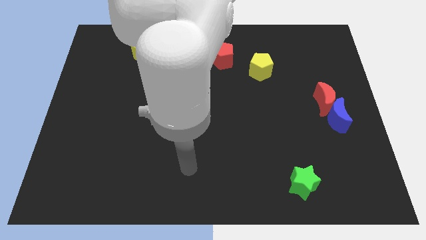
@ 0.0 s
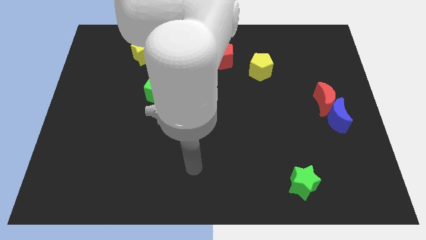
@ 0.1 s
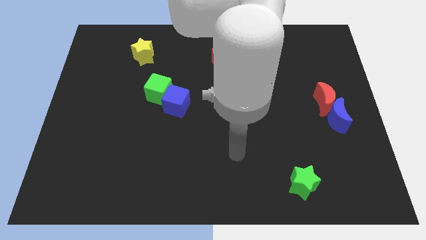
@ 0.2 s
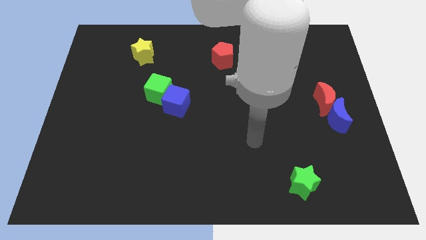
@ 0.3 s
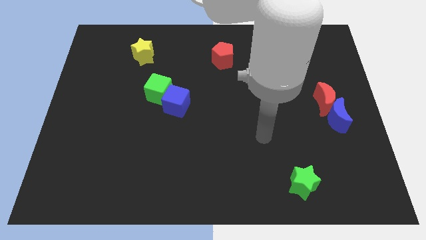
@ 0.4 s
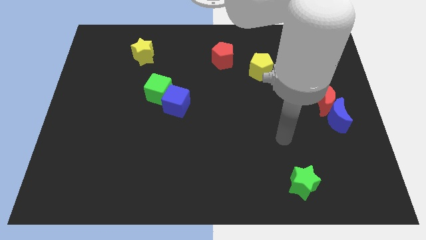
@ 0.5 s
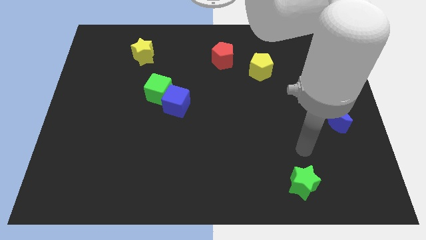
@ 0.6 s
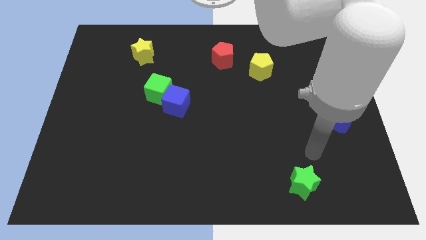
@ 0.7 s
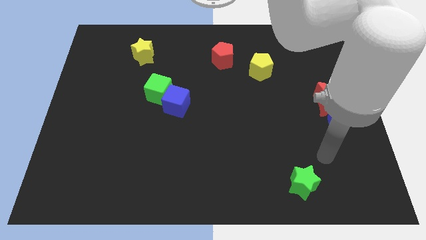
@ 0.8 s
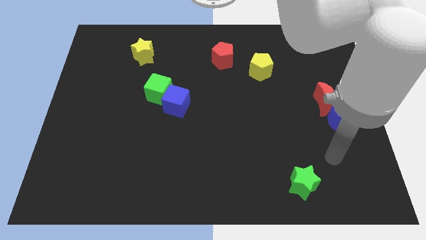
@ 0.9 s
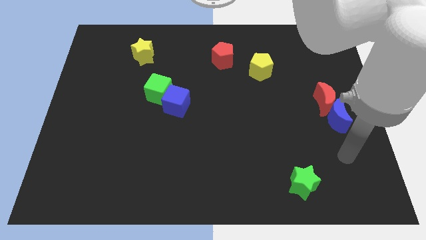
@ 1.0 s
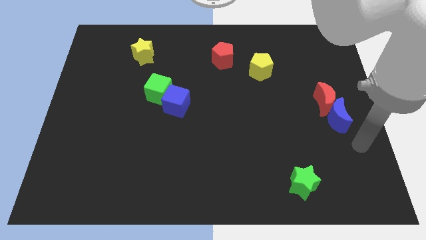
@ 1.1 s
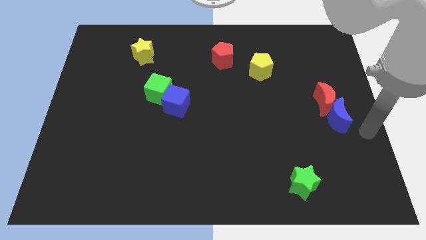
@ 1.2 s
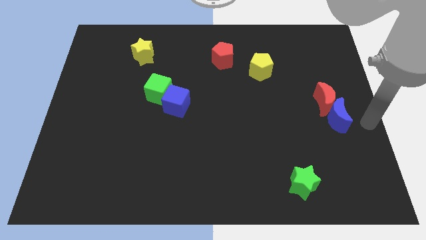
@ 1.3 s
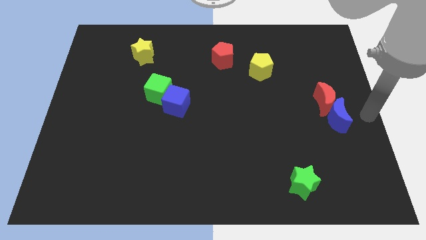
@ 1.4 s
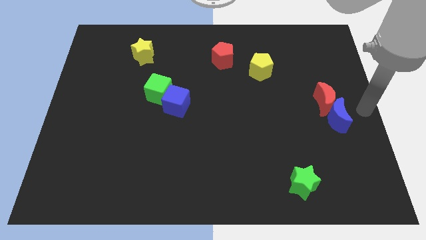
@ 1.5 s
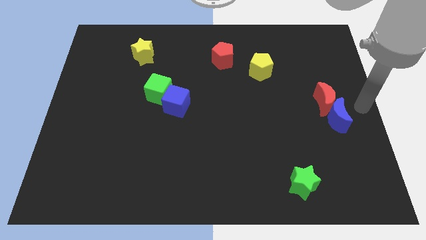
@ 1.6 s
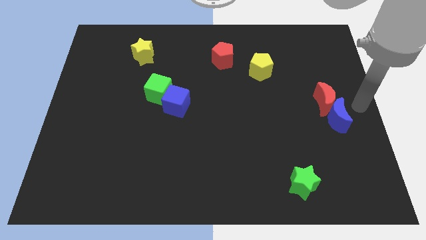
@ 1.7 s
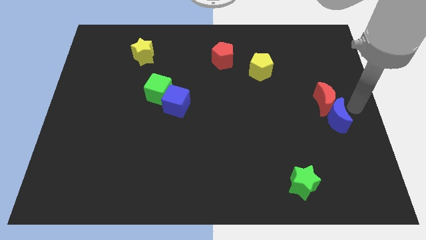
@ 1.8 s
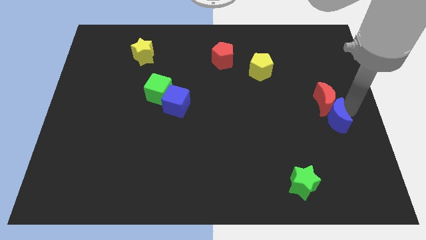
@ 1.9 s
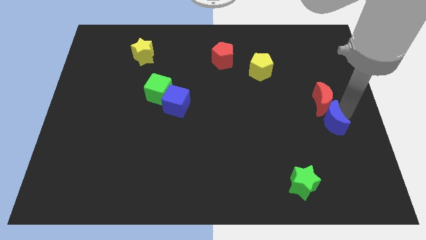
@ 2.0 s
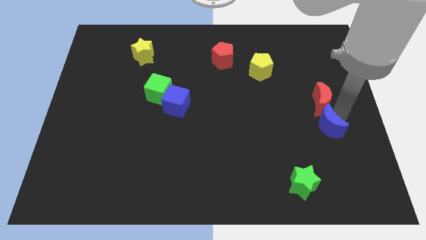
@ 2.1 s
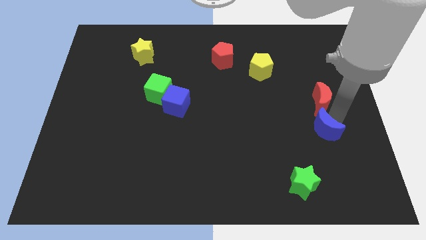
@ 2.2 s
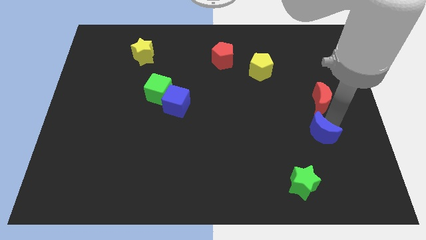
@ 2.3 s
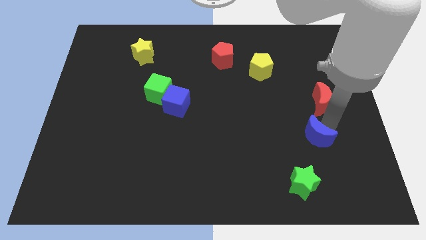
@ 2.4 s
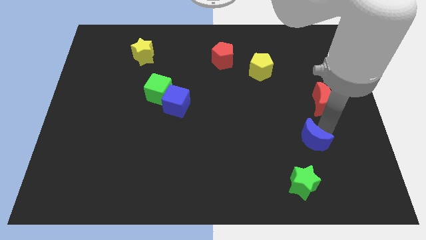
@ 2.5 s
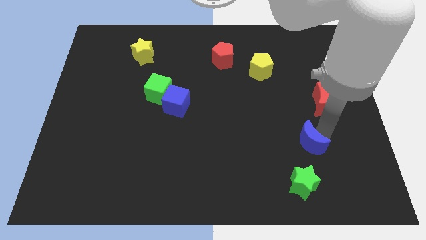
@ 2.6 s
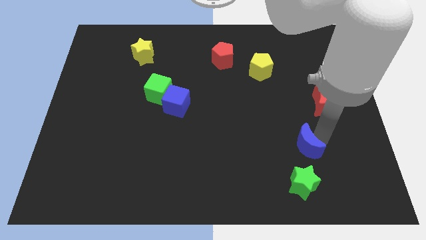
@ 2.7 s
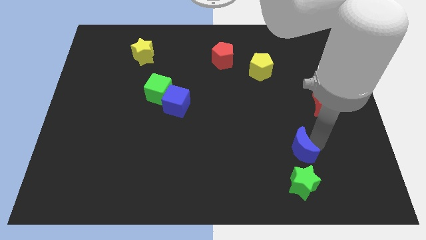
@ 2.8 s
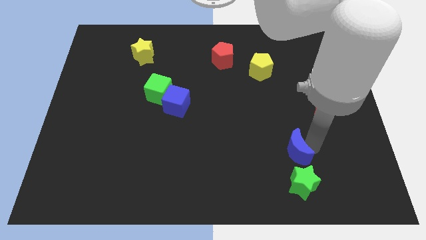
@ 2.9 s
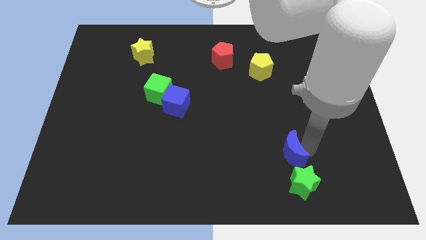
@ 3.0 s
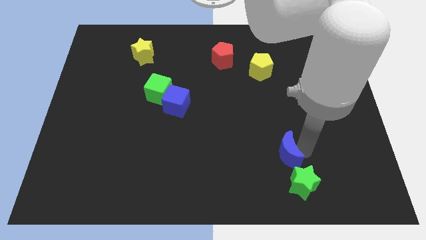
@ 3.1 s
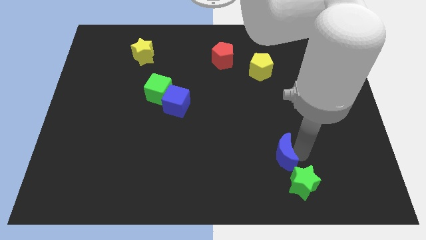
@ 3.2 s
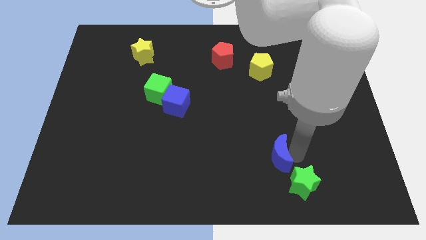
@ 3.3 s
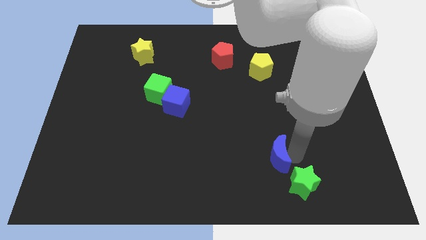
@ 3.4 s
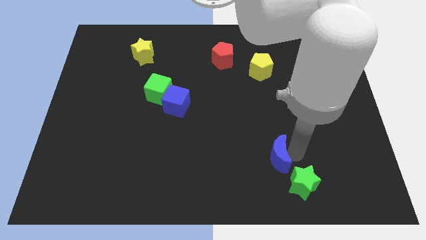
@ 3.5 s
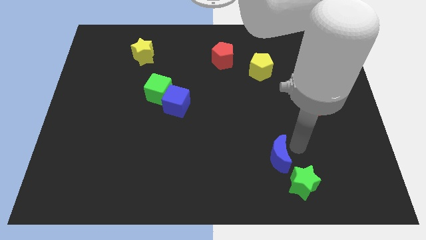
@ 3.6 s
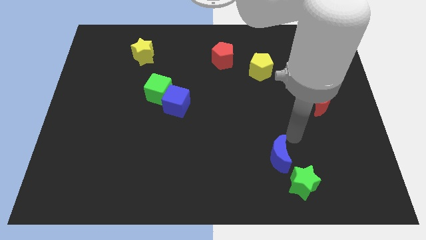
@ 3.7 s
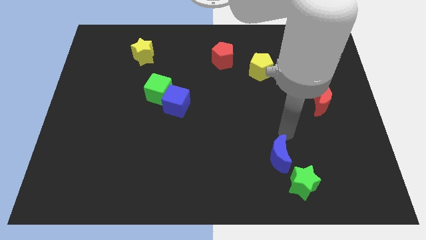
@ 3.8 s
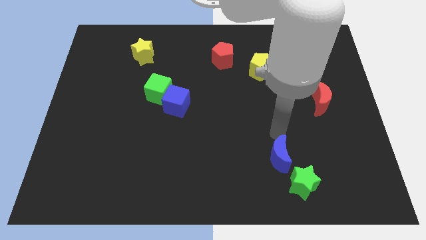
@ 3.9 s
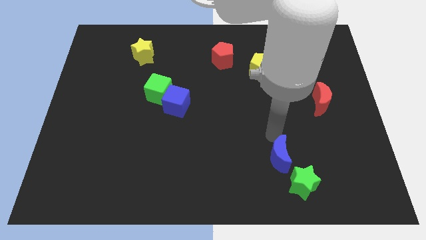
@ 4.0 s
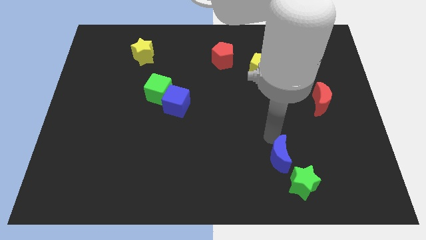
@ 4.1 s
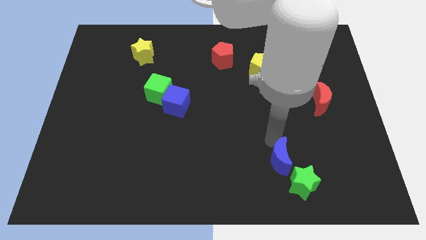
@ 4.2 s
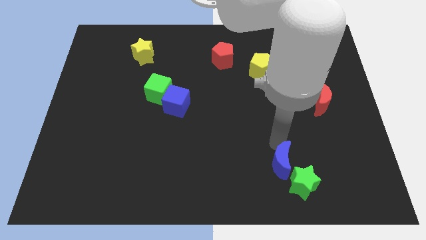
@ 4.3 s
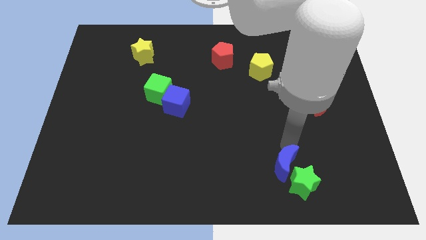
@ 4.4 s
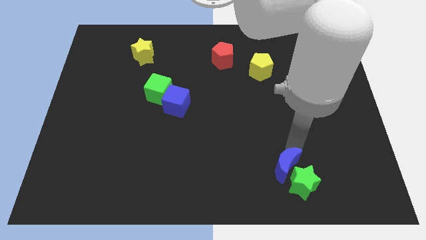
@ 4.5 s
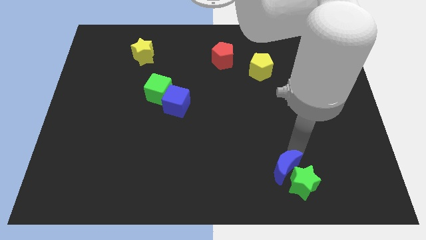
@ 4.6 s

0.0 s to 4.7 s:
put the blue moon towards the green star

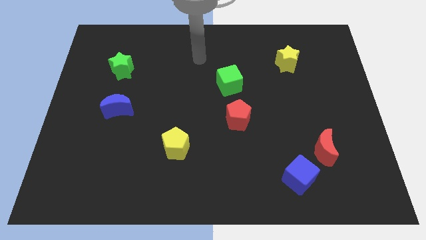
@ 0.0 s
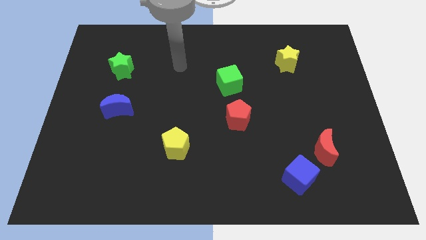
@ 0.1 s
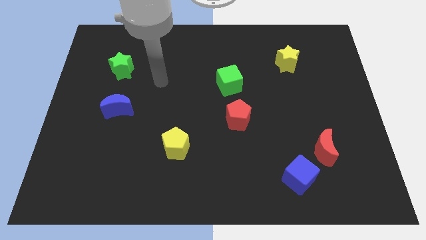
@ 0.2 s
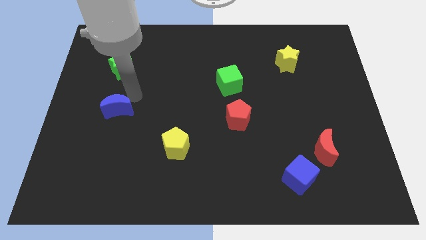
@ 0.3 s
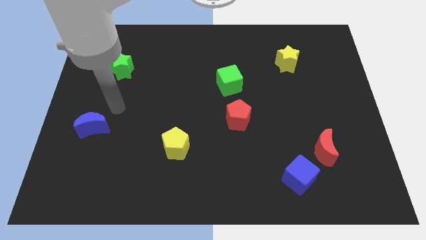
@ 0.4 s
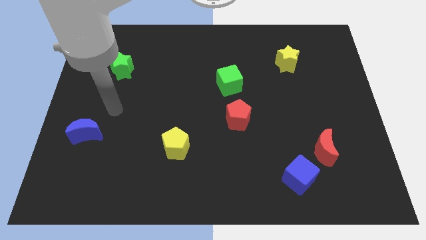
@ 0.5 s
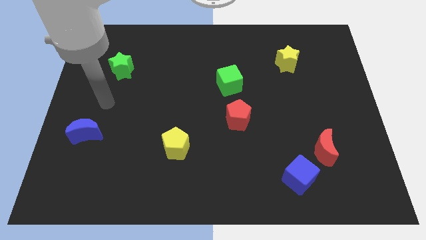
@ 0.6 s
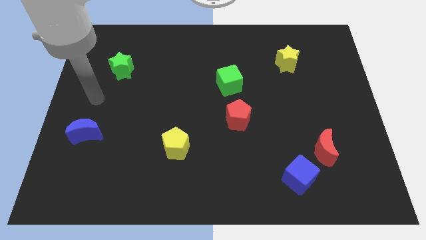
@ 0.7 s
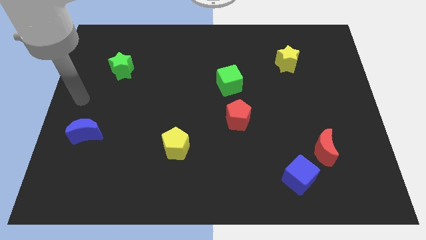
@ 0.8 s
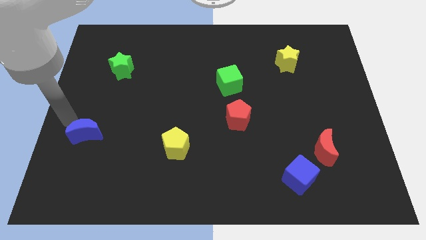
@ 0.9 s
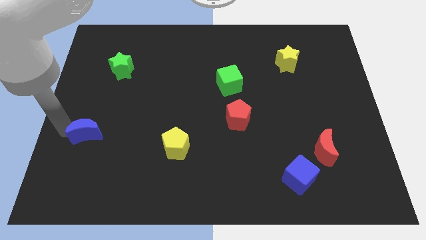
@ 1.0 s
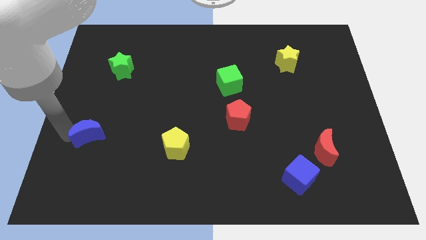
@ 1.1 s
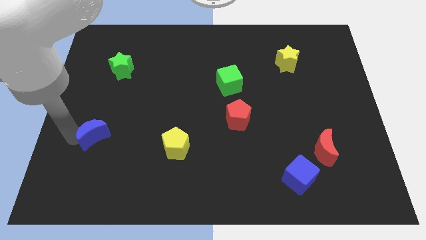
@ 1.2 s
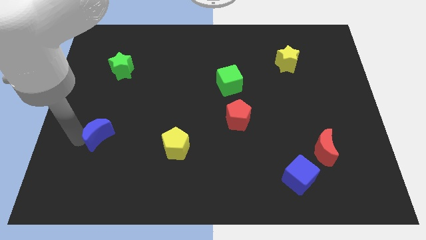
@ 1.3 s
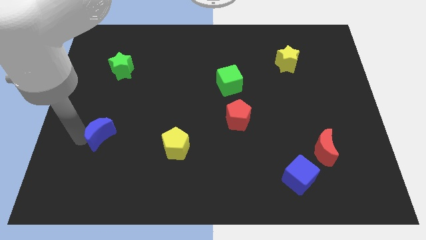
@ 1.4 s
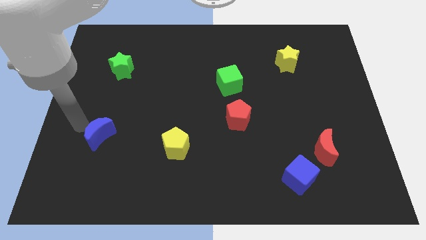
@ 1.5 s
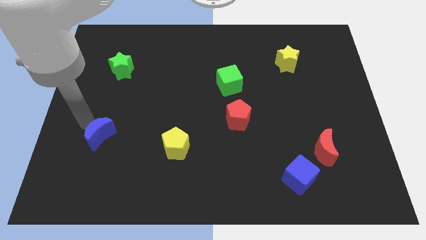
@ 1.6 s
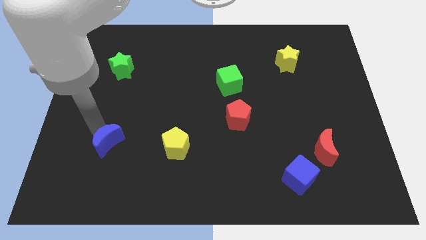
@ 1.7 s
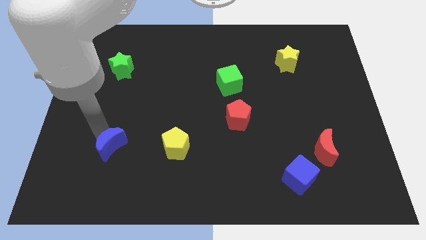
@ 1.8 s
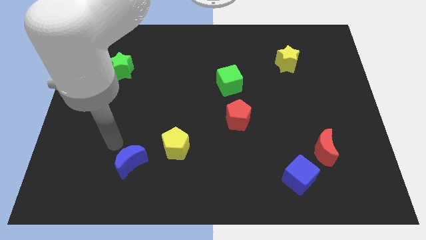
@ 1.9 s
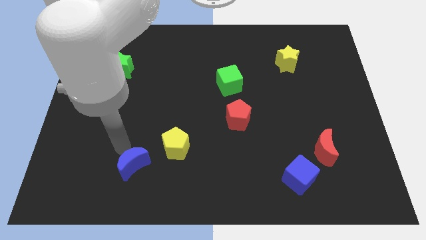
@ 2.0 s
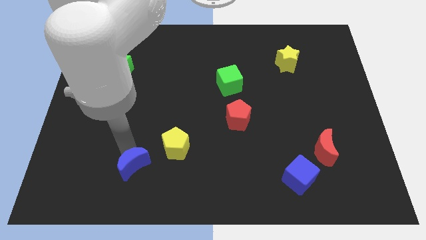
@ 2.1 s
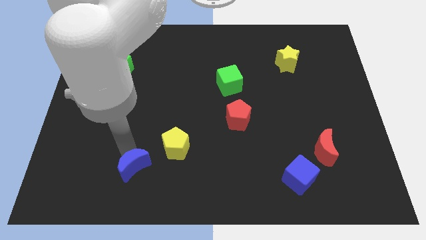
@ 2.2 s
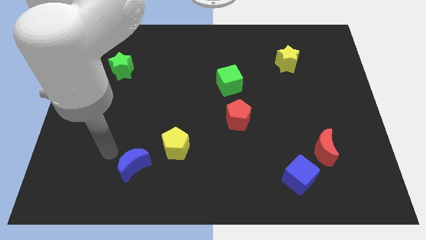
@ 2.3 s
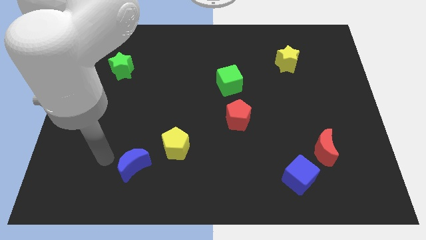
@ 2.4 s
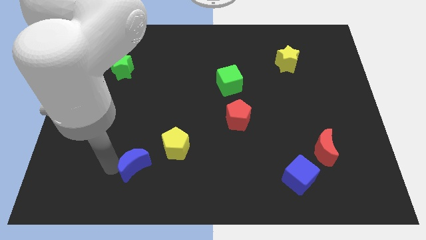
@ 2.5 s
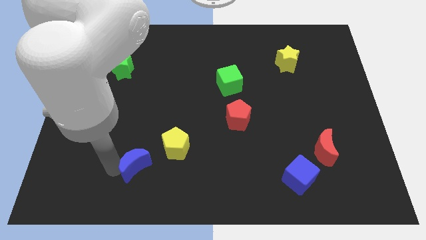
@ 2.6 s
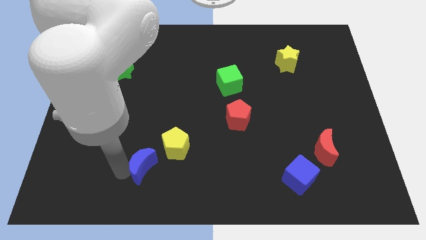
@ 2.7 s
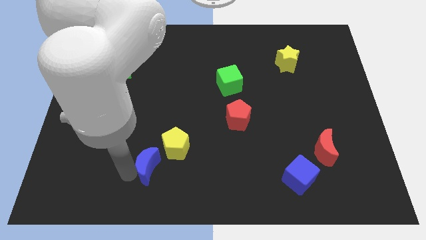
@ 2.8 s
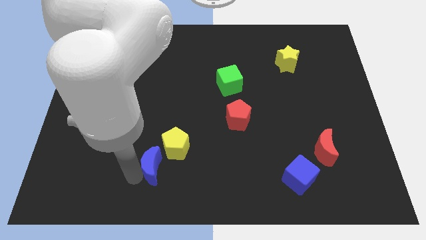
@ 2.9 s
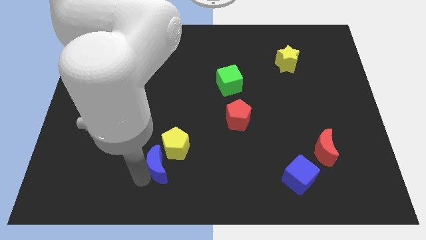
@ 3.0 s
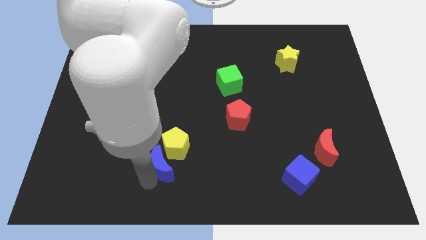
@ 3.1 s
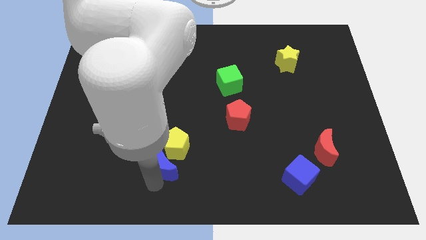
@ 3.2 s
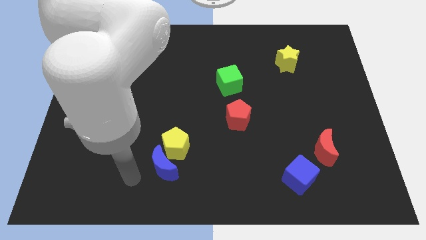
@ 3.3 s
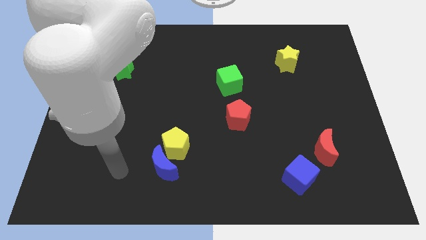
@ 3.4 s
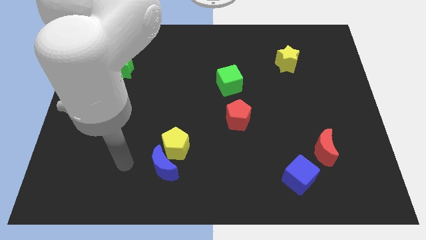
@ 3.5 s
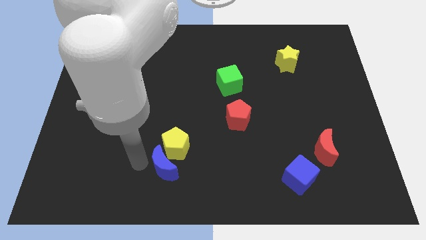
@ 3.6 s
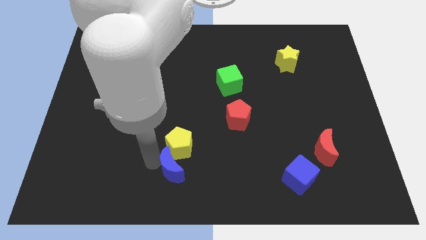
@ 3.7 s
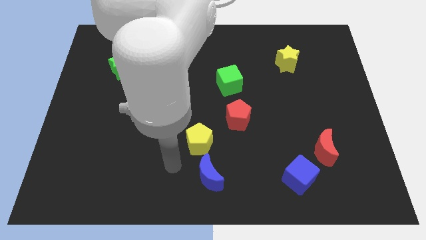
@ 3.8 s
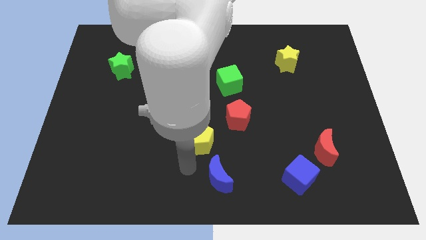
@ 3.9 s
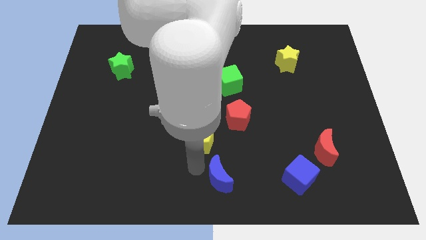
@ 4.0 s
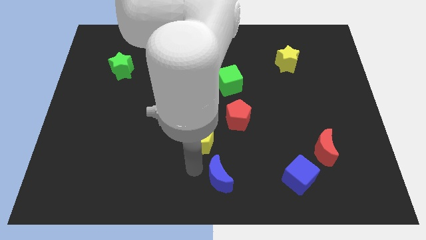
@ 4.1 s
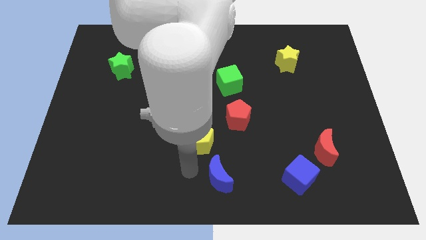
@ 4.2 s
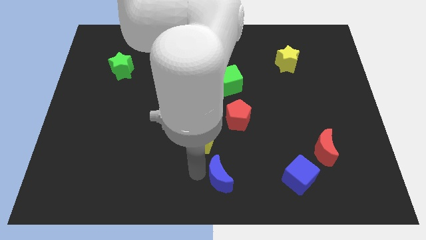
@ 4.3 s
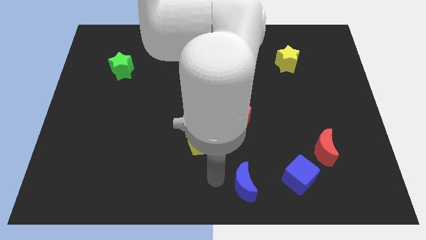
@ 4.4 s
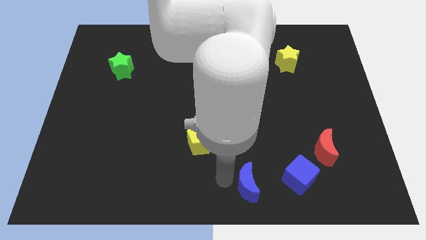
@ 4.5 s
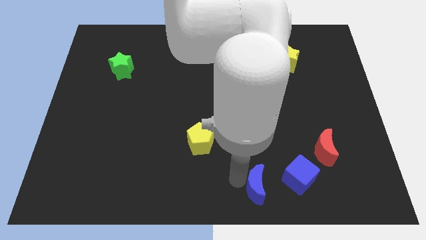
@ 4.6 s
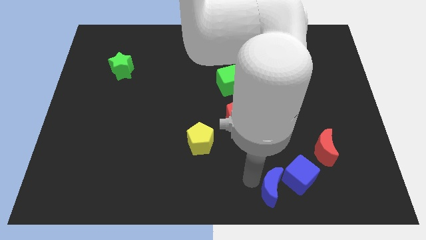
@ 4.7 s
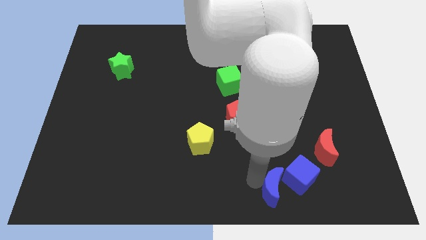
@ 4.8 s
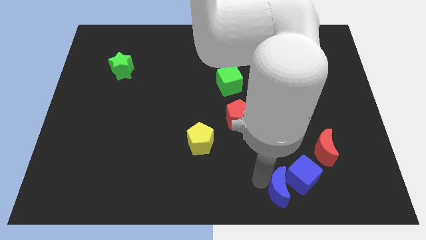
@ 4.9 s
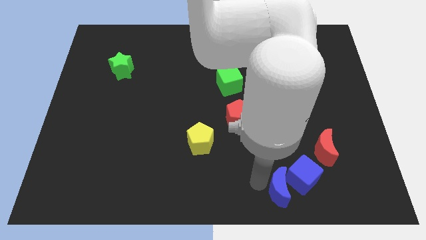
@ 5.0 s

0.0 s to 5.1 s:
move the blue moon to the blue cube
